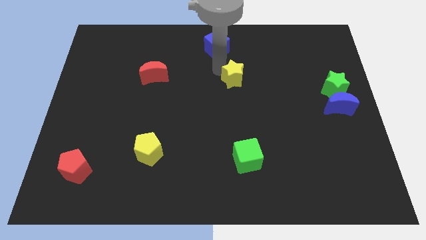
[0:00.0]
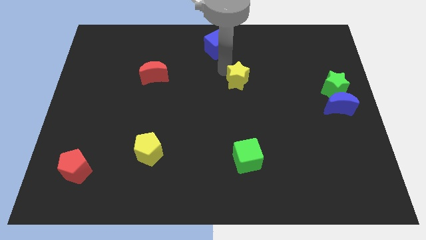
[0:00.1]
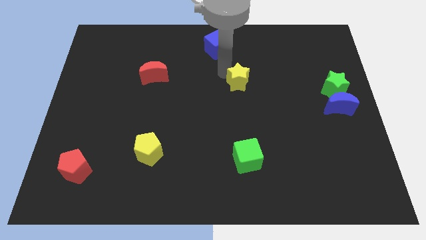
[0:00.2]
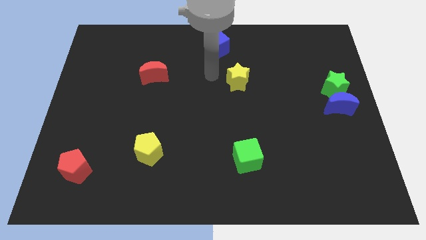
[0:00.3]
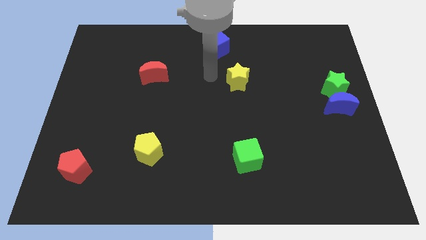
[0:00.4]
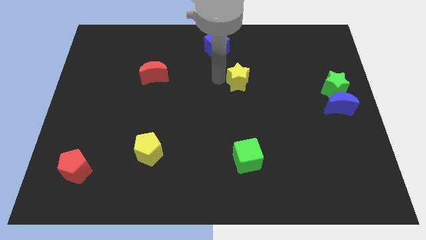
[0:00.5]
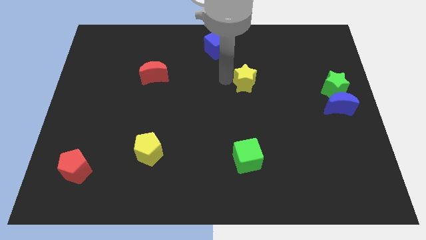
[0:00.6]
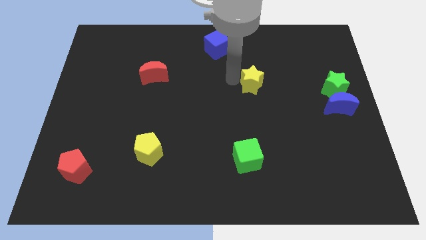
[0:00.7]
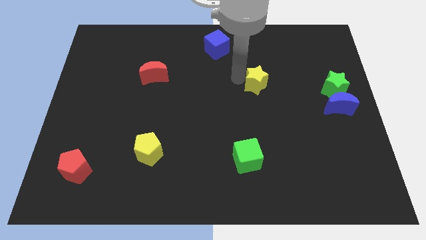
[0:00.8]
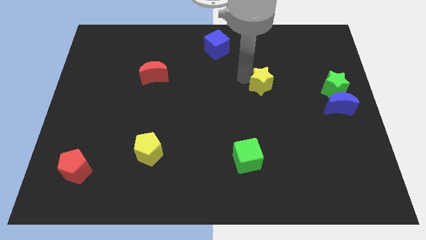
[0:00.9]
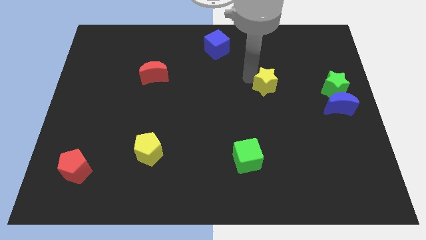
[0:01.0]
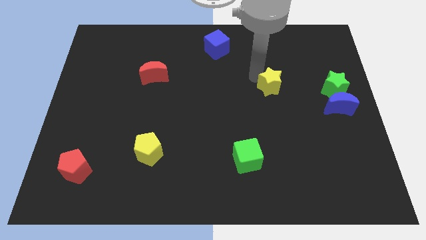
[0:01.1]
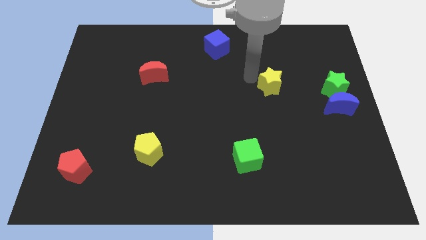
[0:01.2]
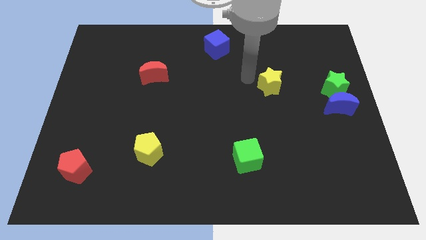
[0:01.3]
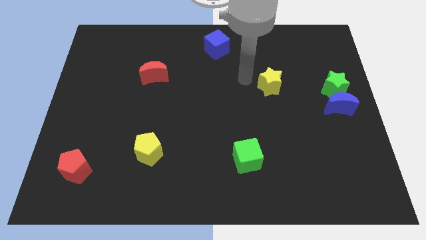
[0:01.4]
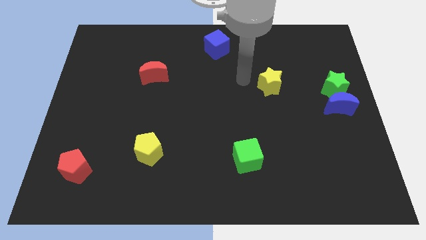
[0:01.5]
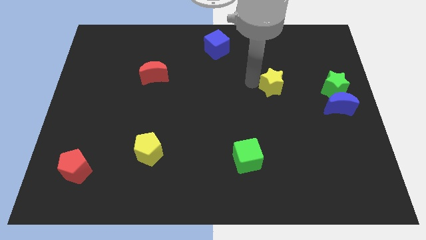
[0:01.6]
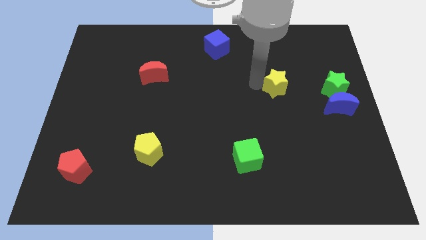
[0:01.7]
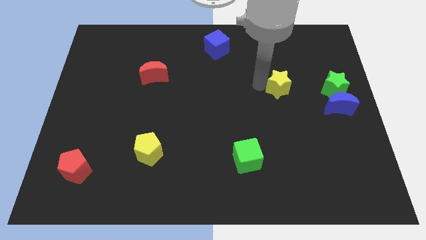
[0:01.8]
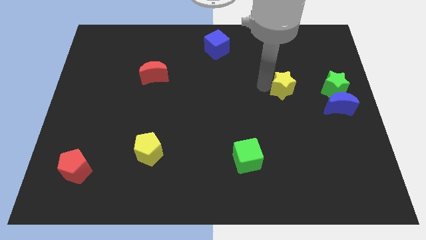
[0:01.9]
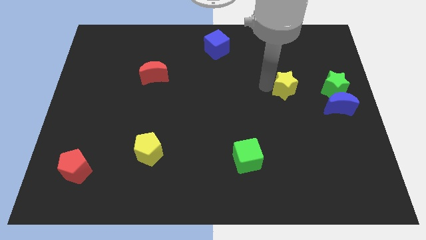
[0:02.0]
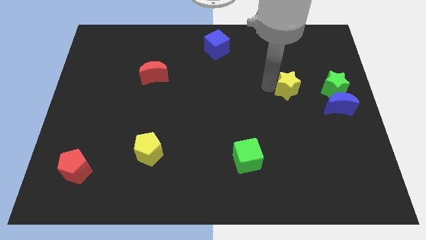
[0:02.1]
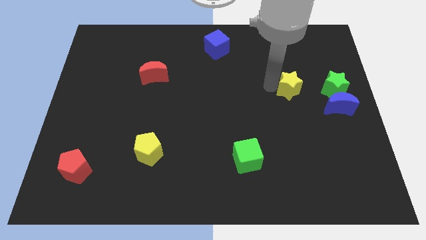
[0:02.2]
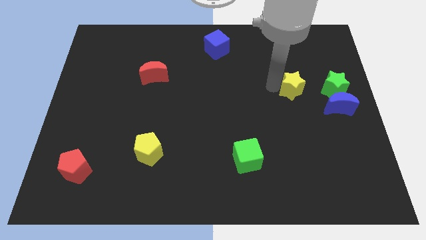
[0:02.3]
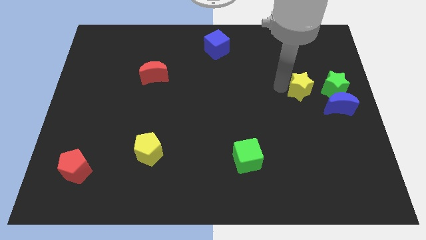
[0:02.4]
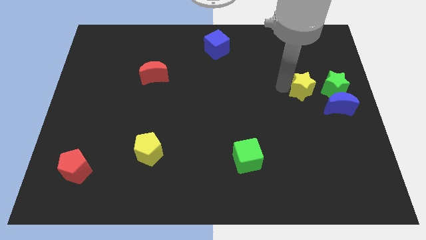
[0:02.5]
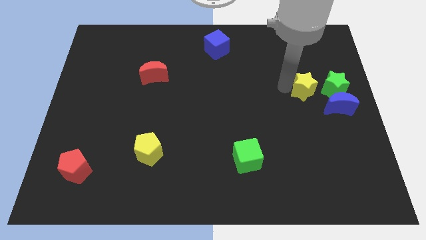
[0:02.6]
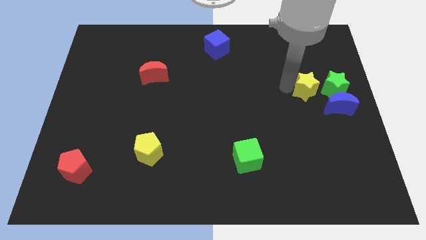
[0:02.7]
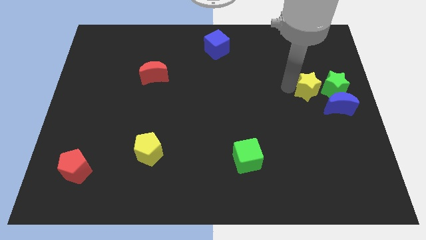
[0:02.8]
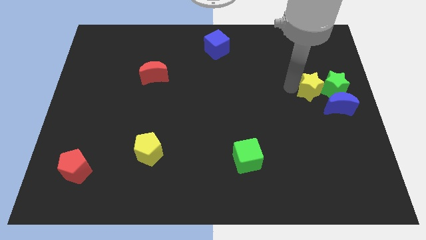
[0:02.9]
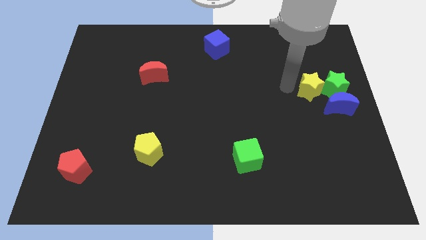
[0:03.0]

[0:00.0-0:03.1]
push the yellow star into the left side of the green star

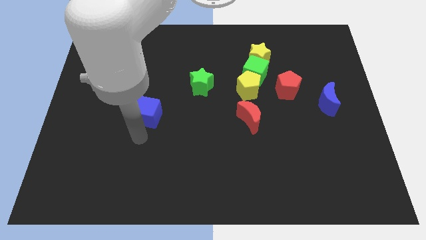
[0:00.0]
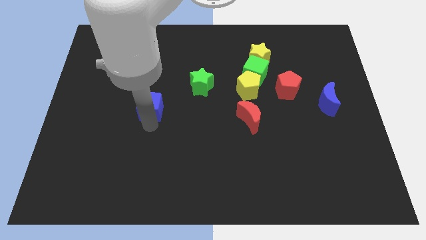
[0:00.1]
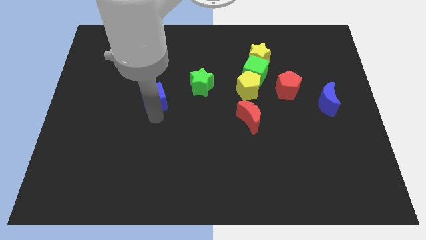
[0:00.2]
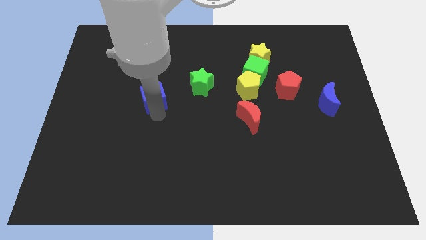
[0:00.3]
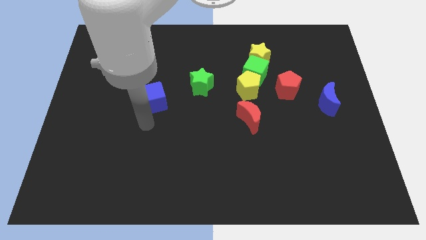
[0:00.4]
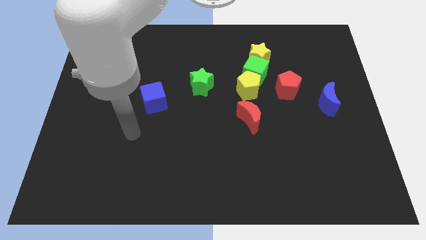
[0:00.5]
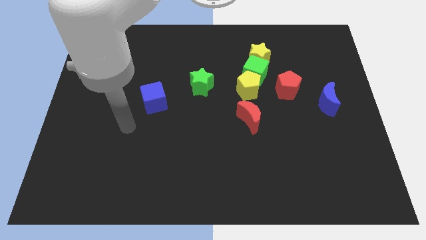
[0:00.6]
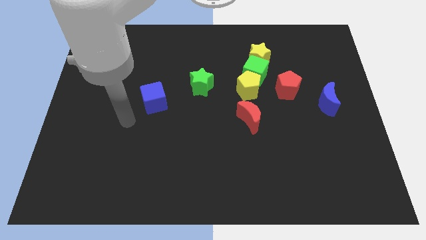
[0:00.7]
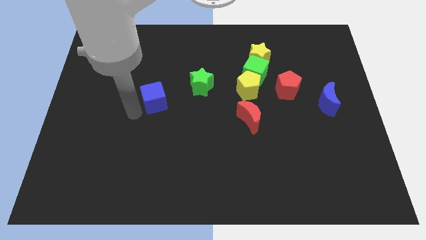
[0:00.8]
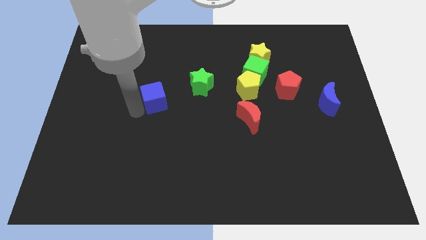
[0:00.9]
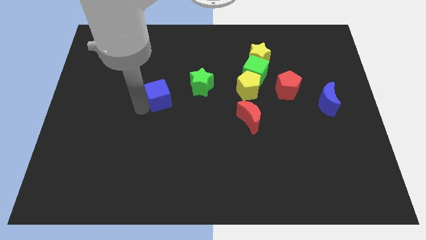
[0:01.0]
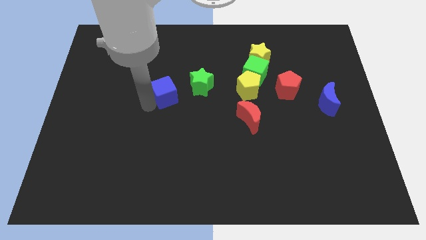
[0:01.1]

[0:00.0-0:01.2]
place blue cube to the left of green star

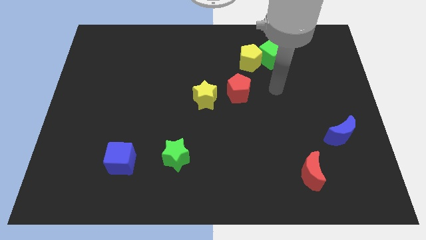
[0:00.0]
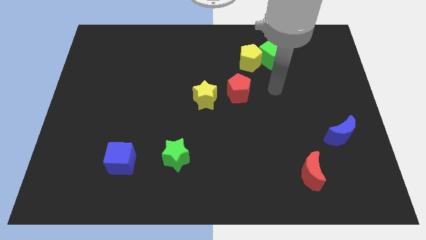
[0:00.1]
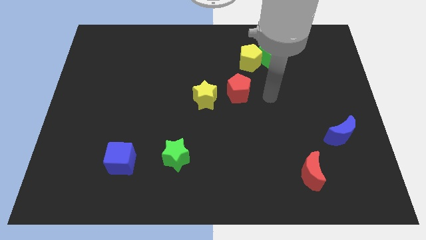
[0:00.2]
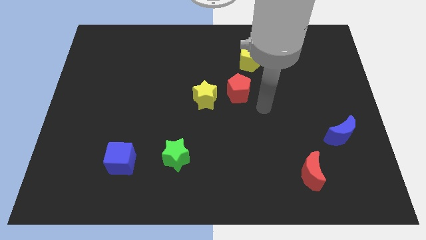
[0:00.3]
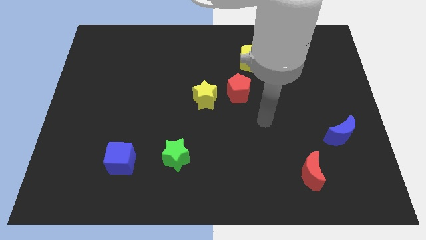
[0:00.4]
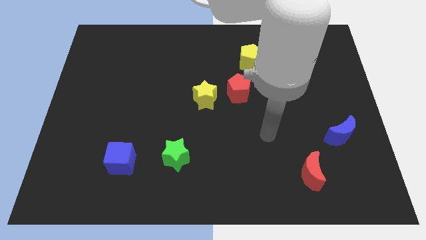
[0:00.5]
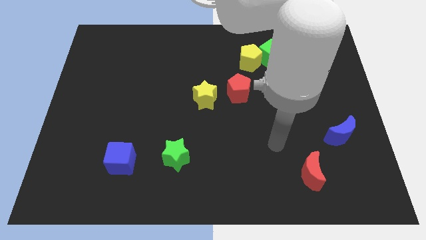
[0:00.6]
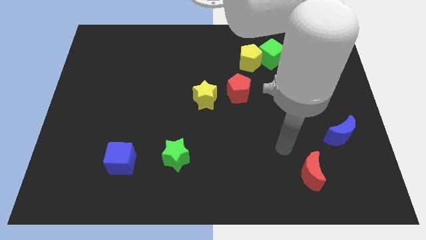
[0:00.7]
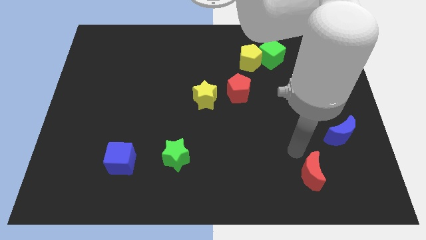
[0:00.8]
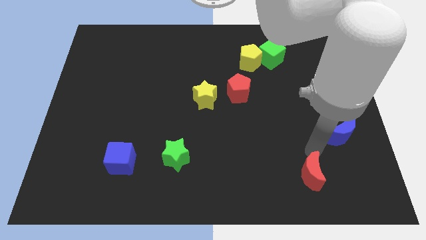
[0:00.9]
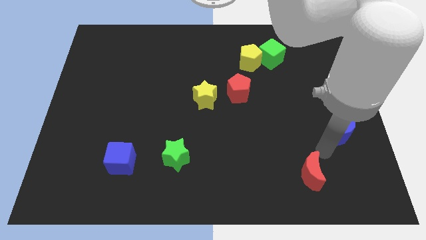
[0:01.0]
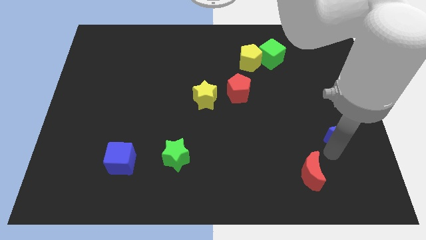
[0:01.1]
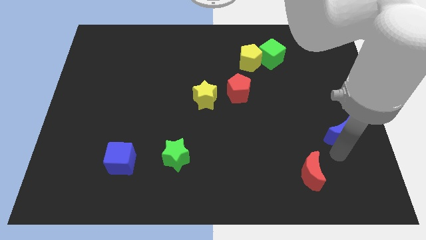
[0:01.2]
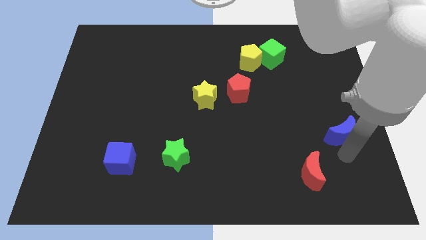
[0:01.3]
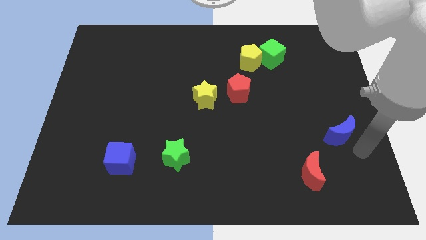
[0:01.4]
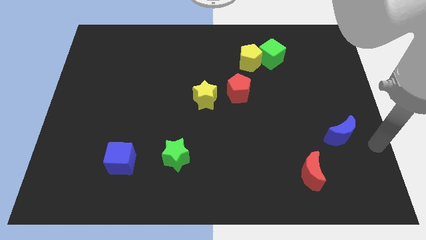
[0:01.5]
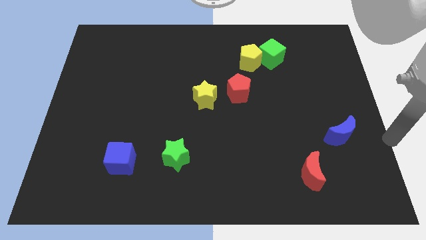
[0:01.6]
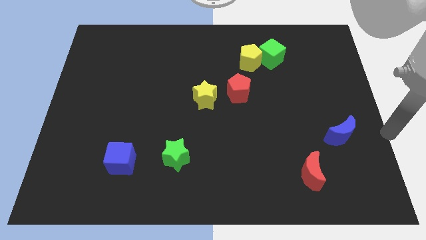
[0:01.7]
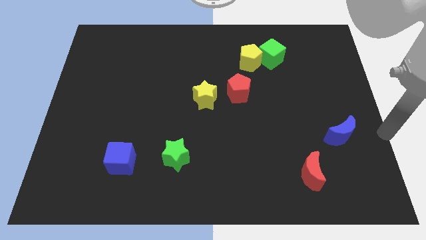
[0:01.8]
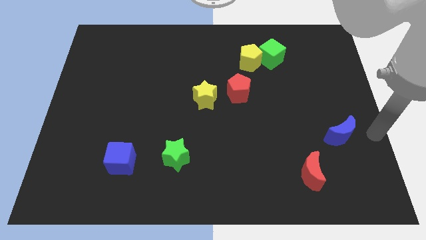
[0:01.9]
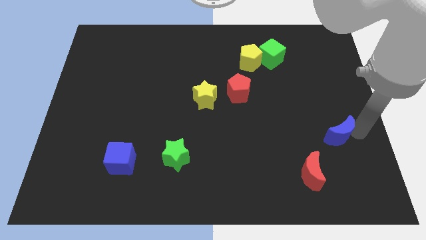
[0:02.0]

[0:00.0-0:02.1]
push your arm at the top right side of the blue moon

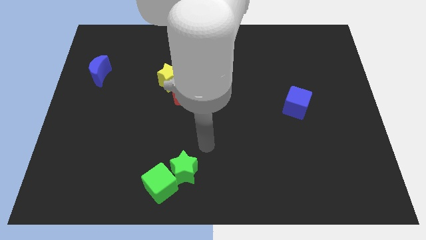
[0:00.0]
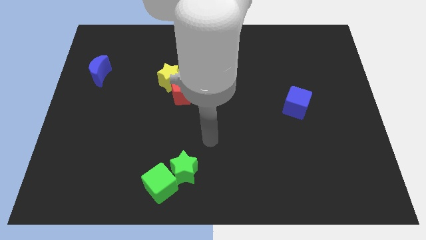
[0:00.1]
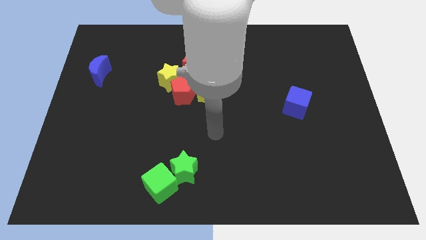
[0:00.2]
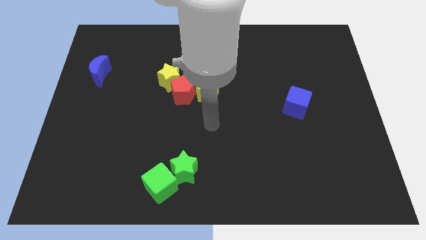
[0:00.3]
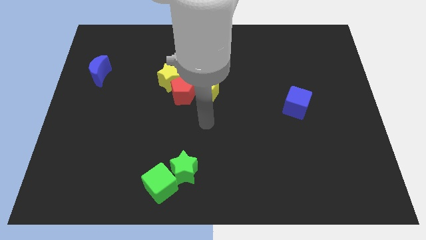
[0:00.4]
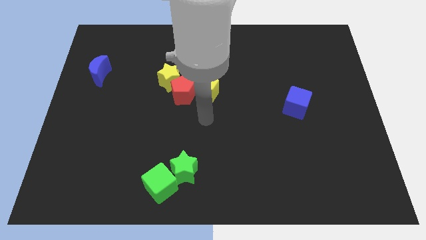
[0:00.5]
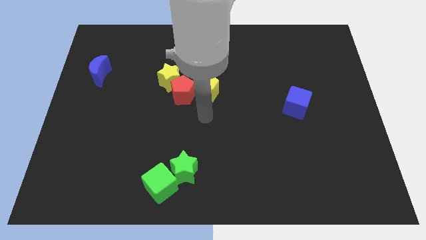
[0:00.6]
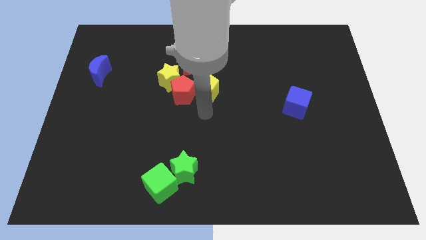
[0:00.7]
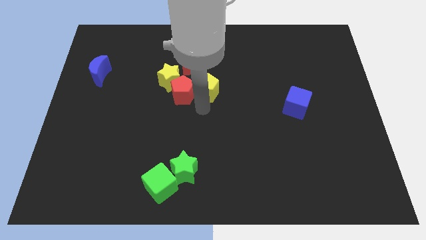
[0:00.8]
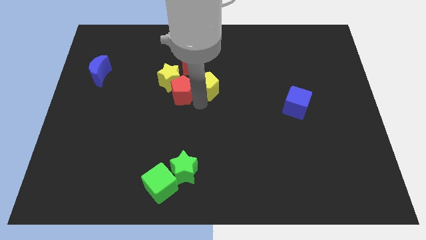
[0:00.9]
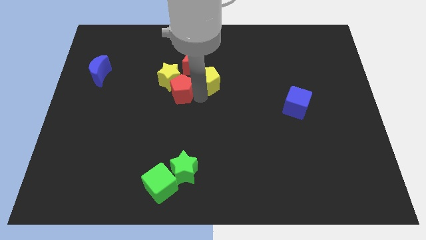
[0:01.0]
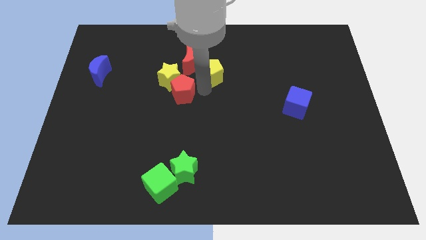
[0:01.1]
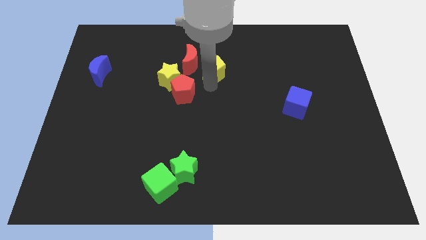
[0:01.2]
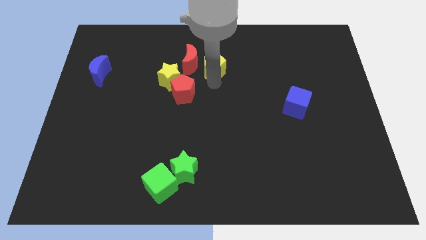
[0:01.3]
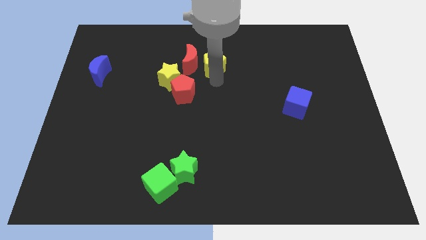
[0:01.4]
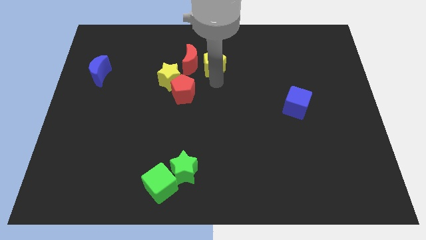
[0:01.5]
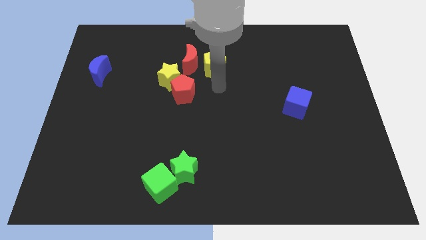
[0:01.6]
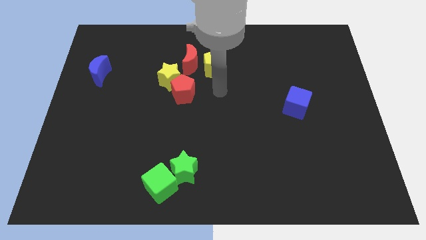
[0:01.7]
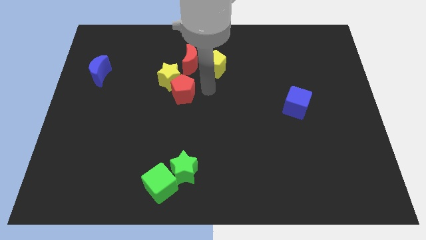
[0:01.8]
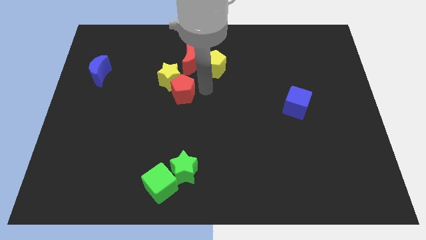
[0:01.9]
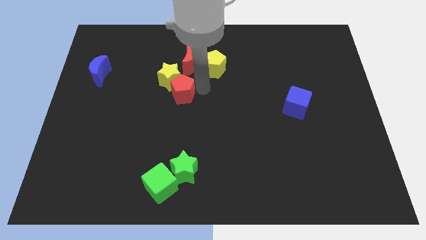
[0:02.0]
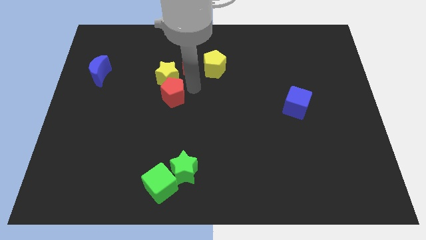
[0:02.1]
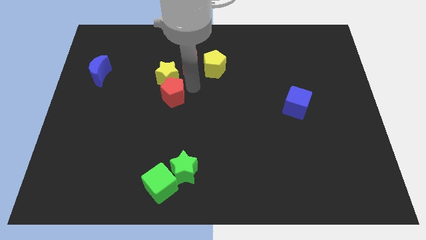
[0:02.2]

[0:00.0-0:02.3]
move the yellow pentagon to right side red crescent

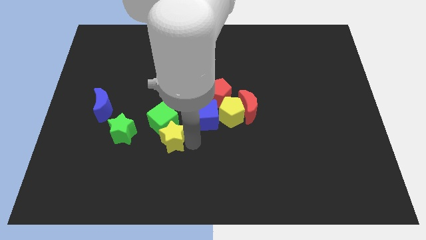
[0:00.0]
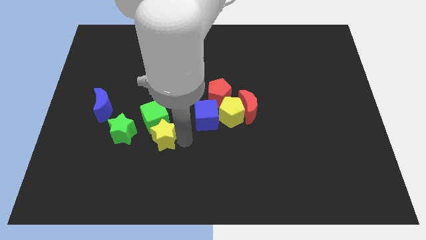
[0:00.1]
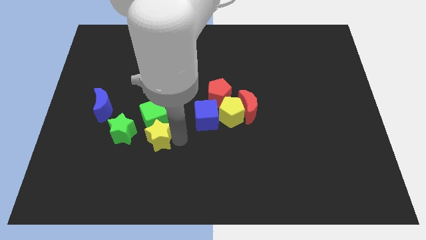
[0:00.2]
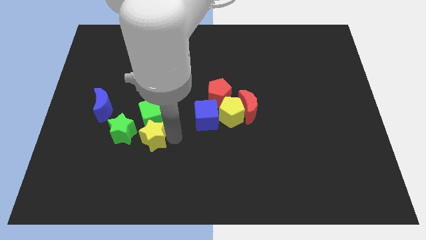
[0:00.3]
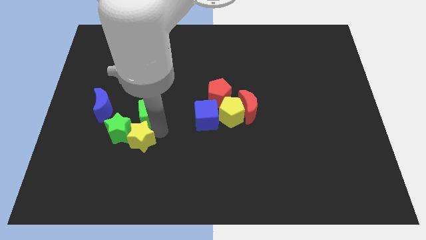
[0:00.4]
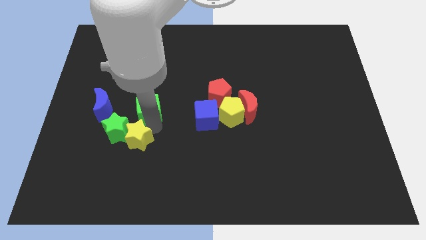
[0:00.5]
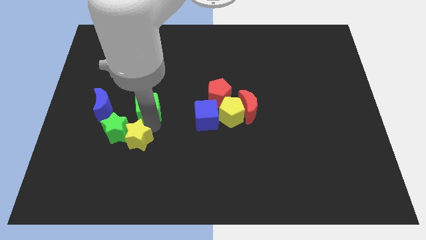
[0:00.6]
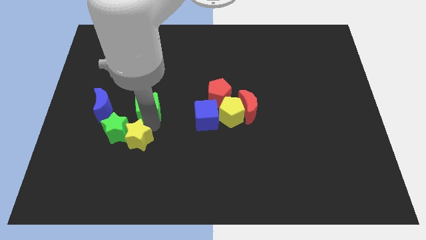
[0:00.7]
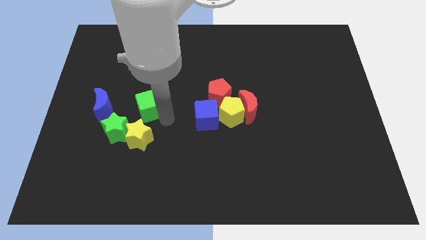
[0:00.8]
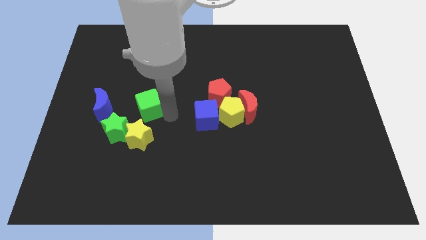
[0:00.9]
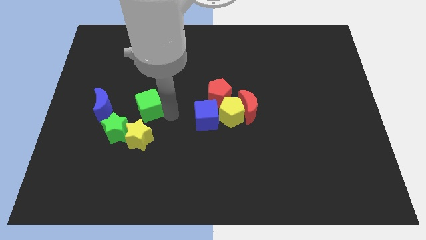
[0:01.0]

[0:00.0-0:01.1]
push the yellow star into the green star
